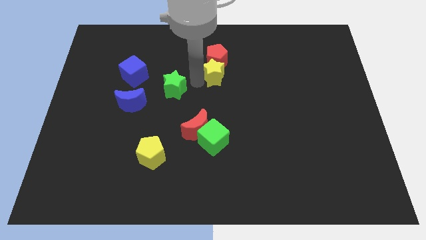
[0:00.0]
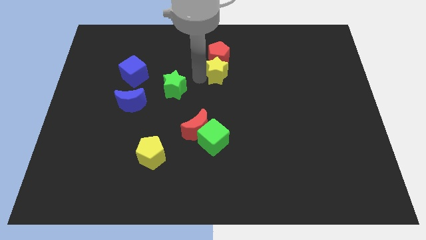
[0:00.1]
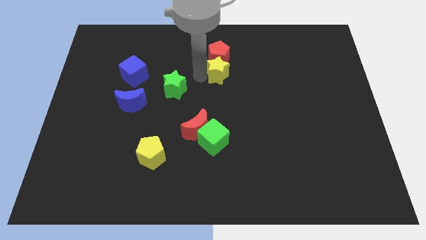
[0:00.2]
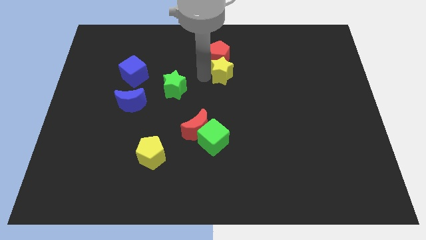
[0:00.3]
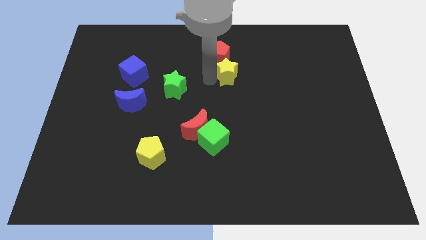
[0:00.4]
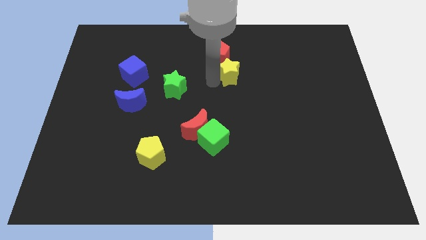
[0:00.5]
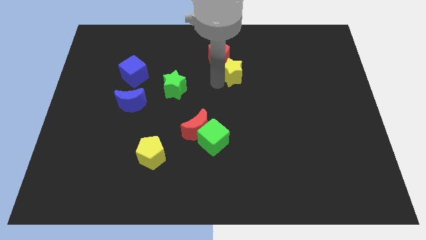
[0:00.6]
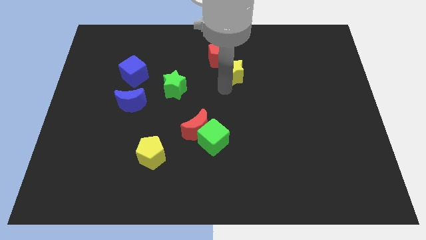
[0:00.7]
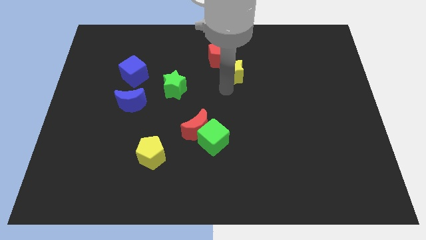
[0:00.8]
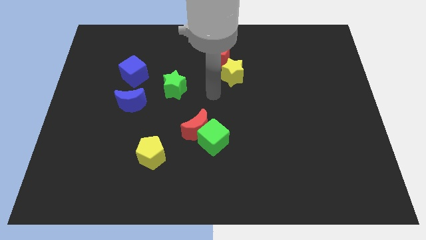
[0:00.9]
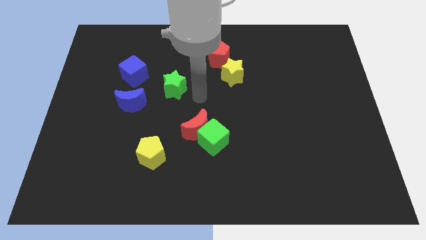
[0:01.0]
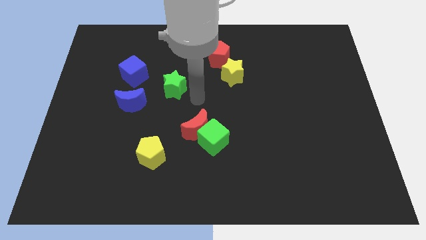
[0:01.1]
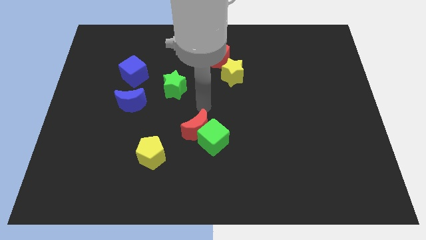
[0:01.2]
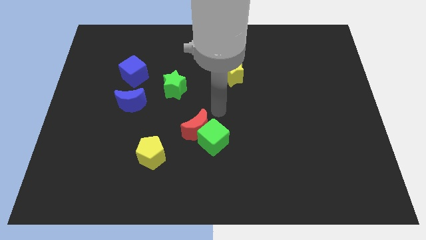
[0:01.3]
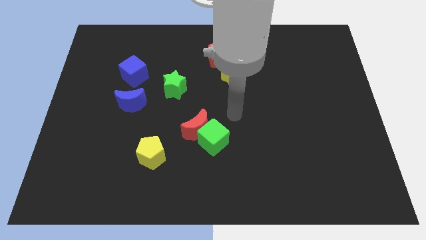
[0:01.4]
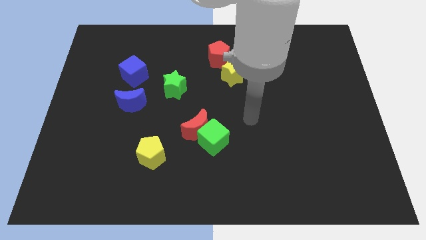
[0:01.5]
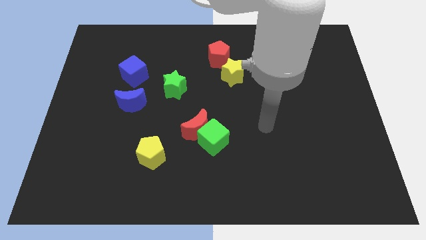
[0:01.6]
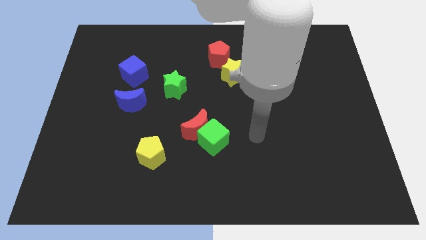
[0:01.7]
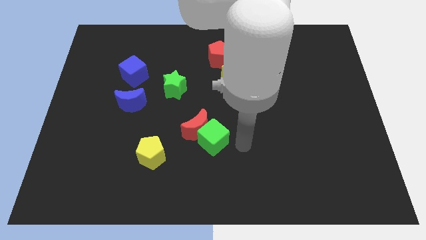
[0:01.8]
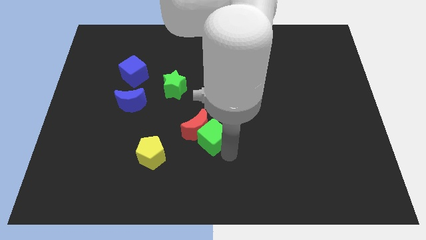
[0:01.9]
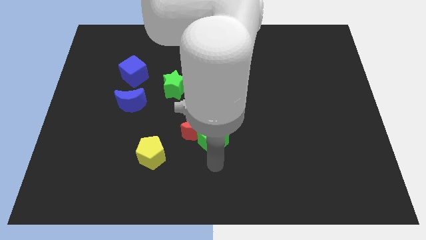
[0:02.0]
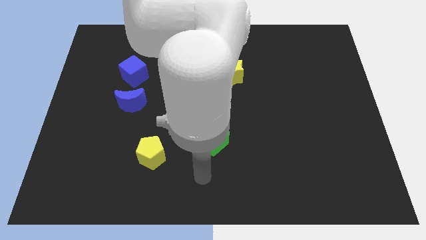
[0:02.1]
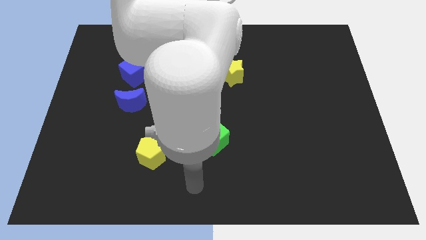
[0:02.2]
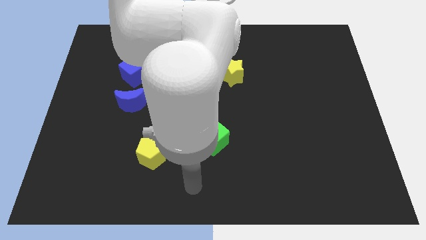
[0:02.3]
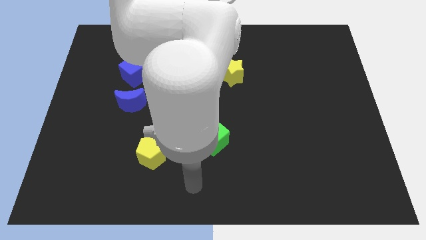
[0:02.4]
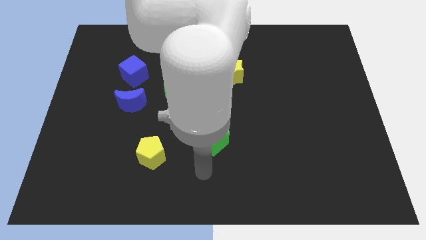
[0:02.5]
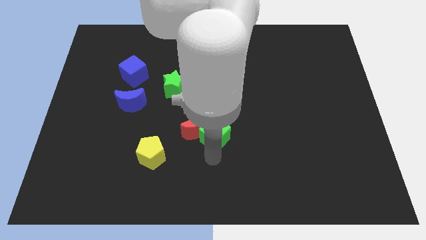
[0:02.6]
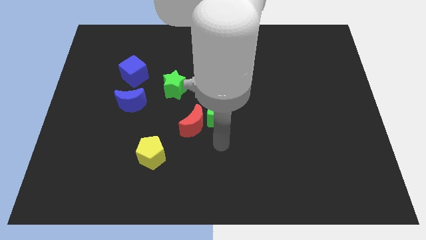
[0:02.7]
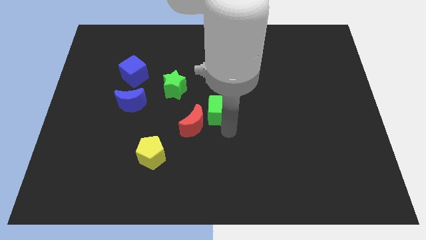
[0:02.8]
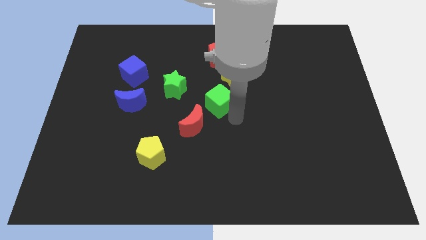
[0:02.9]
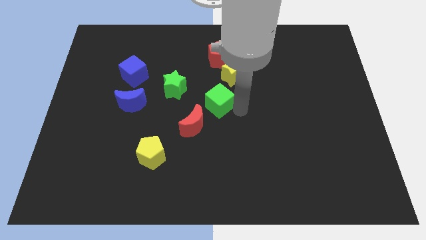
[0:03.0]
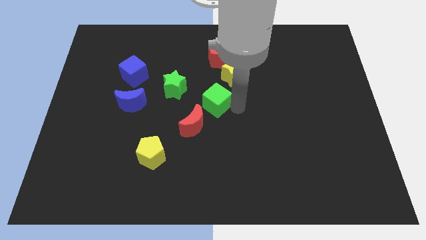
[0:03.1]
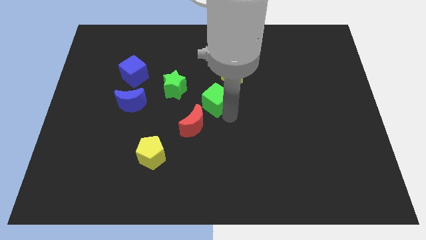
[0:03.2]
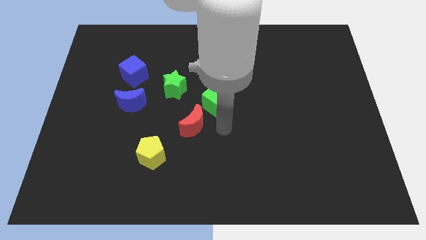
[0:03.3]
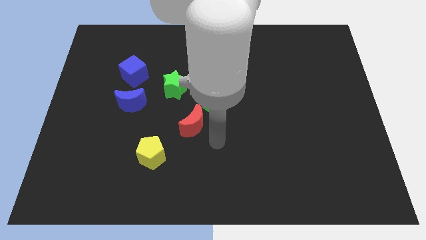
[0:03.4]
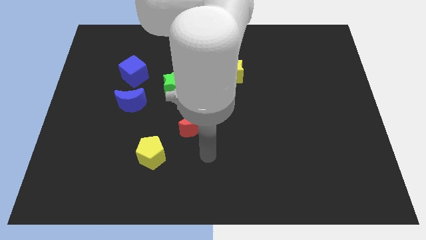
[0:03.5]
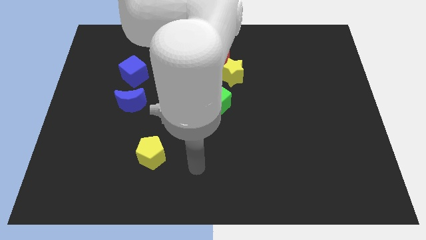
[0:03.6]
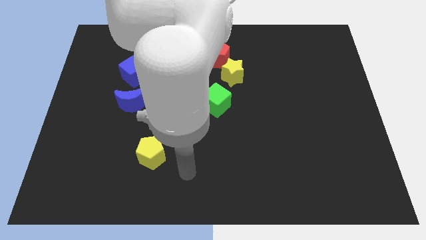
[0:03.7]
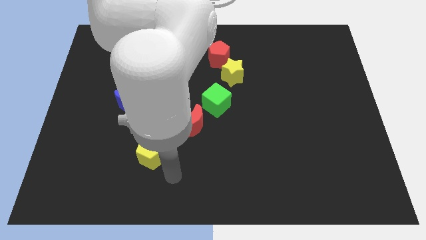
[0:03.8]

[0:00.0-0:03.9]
place the green cube in between the yellow star and red moon

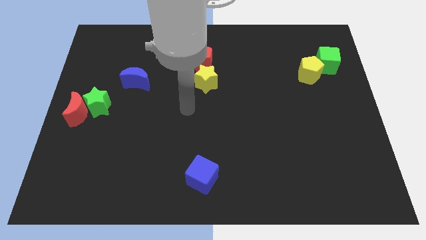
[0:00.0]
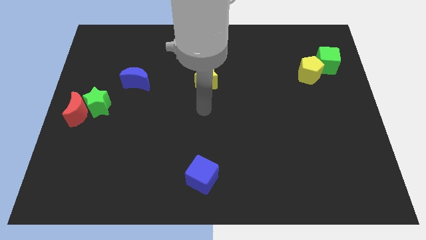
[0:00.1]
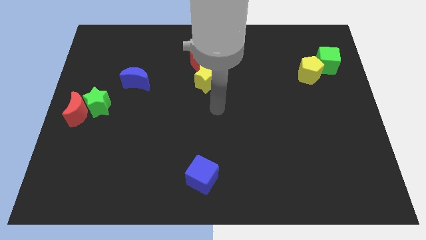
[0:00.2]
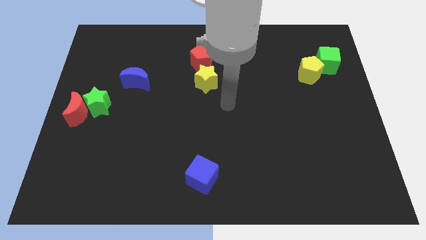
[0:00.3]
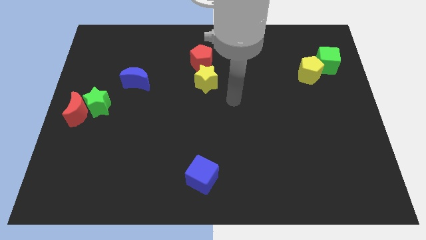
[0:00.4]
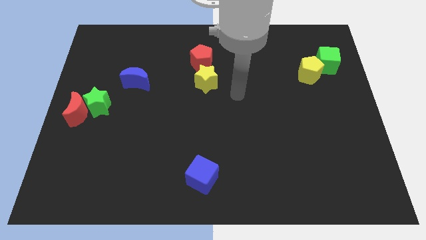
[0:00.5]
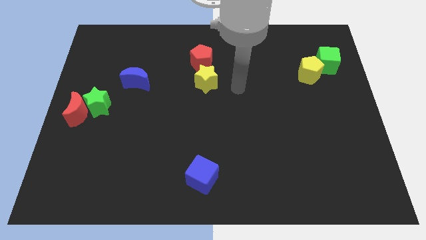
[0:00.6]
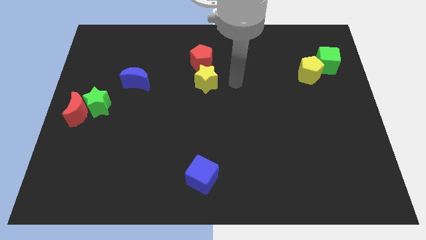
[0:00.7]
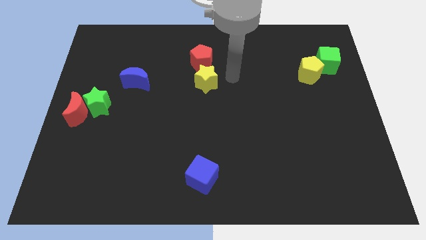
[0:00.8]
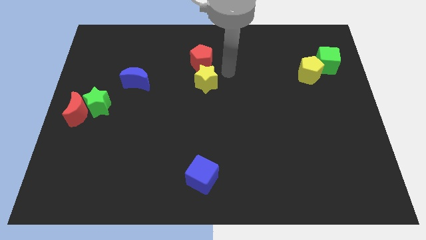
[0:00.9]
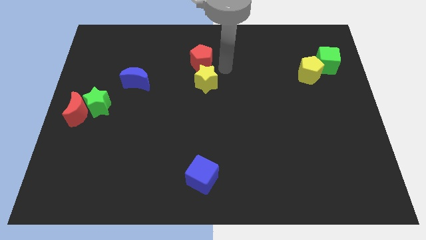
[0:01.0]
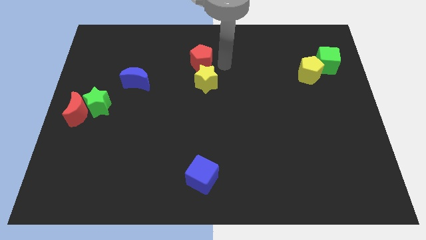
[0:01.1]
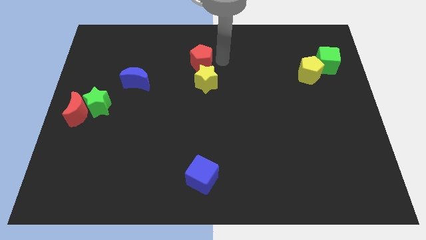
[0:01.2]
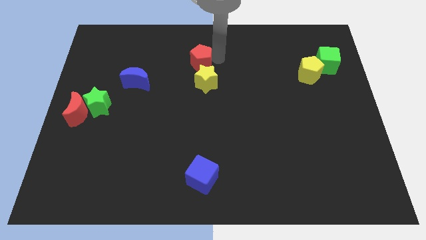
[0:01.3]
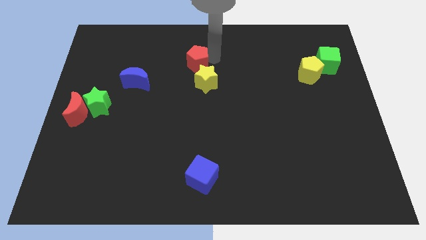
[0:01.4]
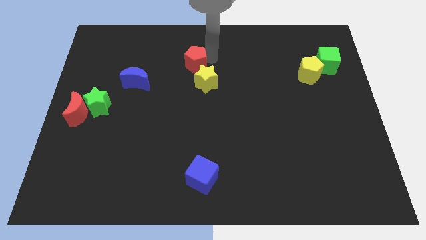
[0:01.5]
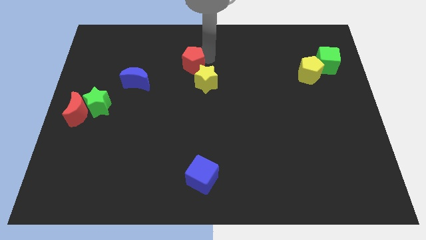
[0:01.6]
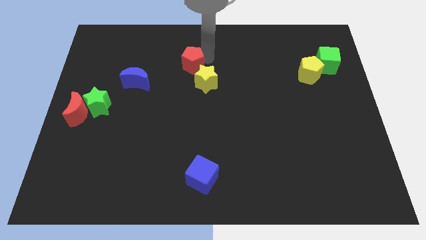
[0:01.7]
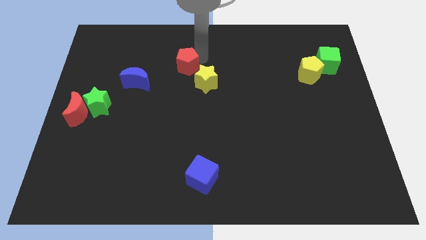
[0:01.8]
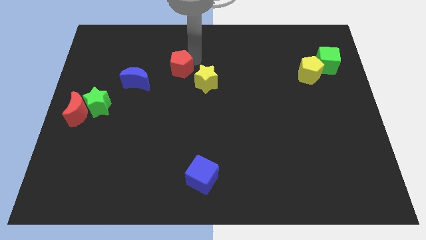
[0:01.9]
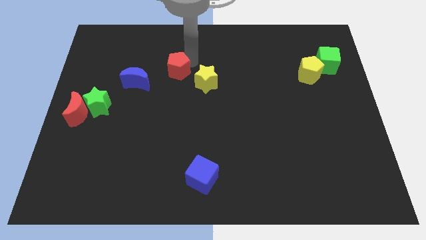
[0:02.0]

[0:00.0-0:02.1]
push red pentagon to the top left of yellow star

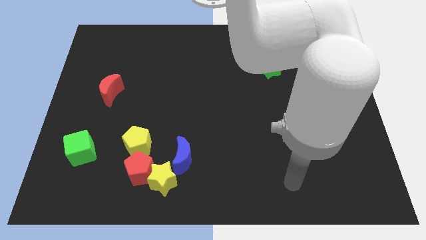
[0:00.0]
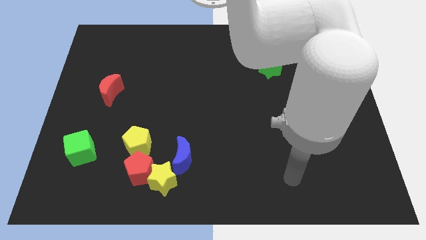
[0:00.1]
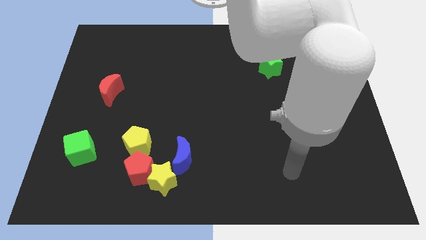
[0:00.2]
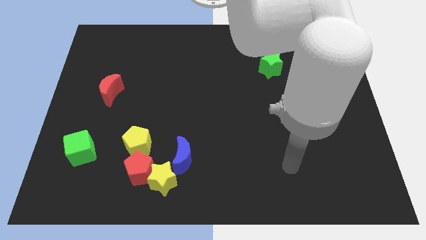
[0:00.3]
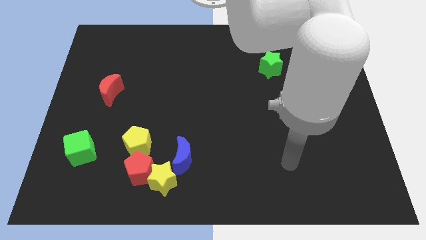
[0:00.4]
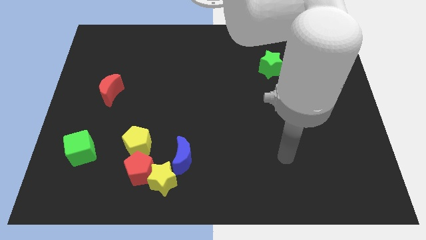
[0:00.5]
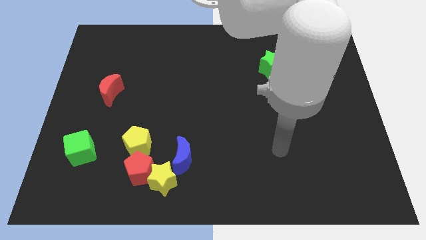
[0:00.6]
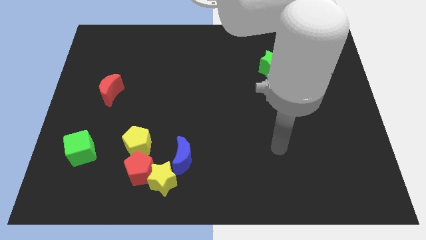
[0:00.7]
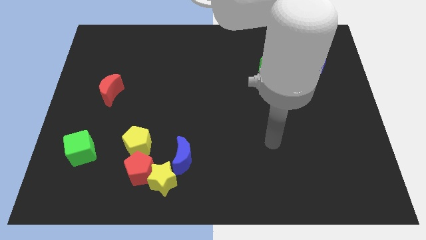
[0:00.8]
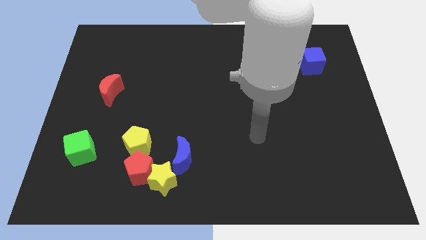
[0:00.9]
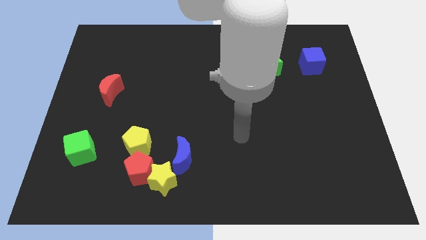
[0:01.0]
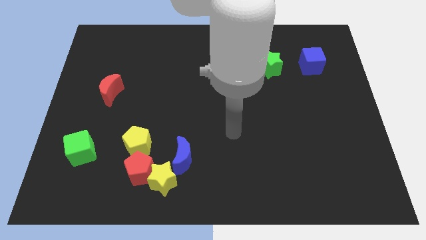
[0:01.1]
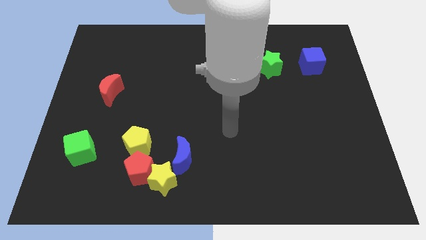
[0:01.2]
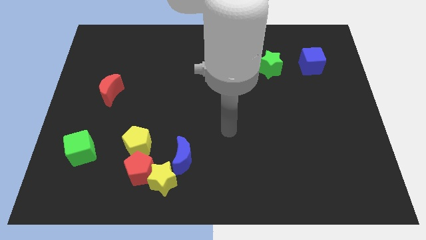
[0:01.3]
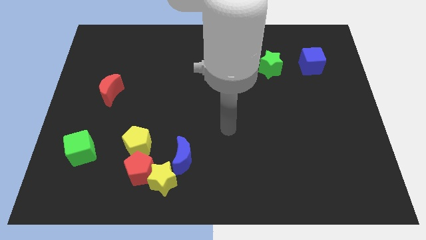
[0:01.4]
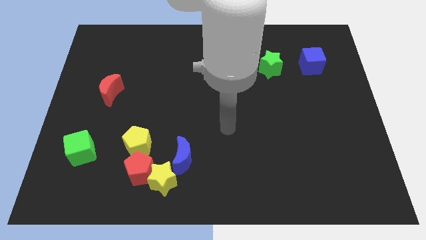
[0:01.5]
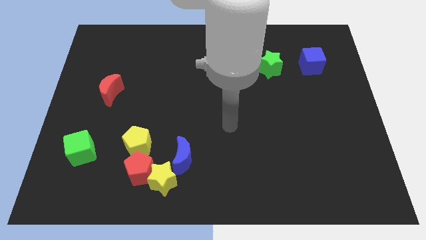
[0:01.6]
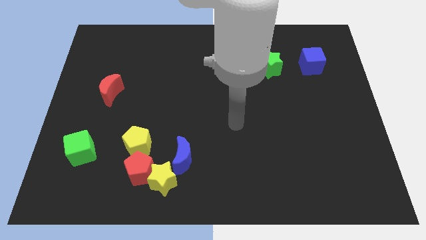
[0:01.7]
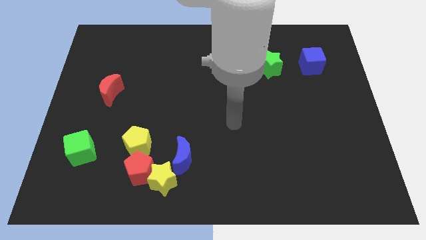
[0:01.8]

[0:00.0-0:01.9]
move your arm to the center of the board

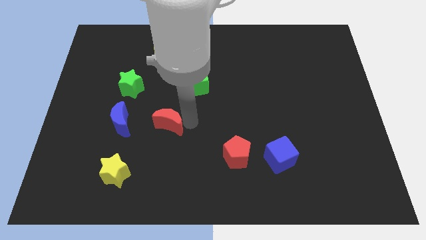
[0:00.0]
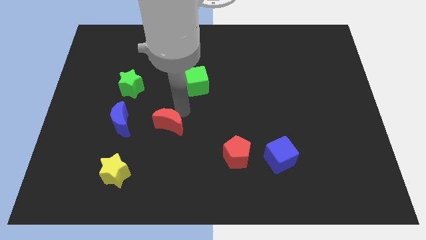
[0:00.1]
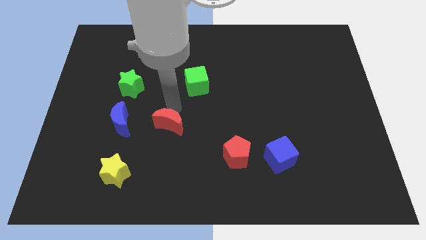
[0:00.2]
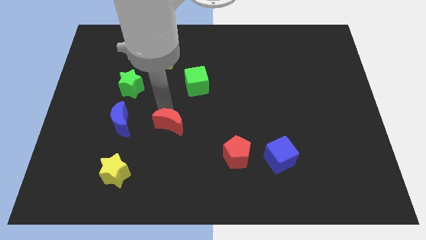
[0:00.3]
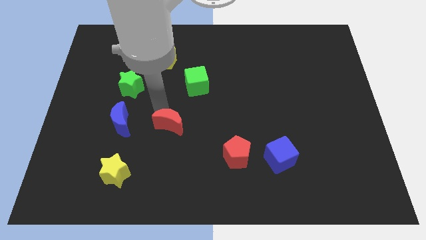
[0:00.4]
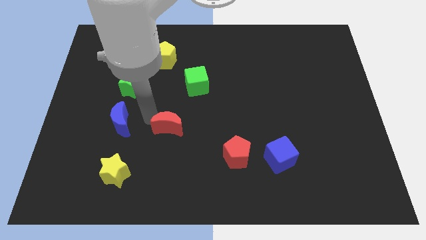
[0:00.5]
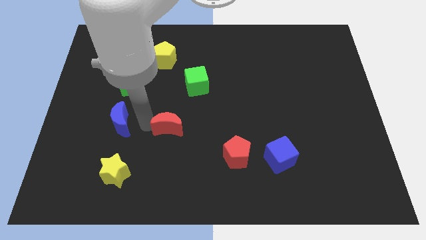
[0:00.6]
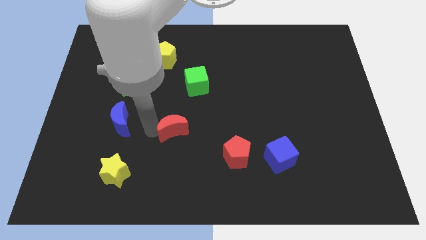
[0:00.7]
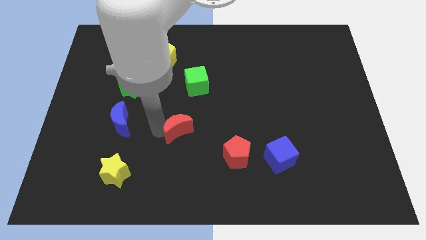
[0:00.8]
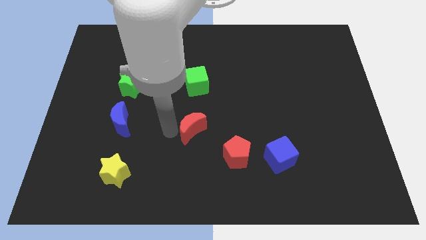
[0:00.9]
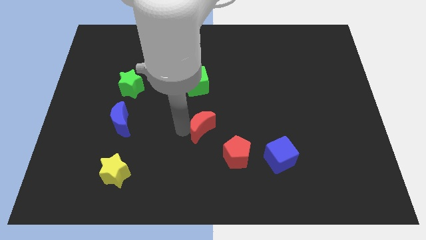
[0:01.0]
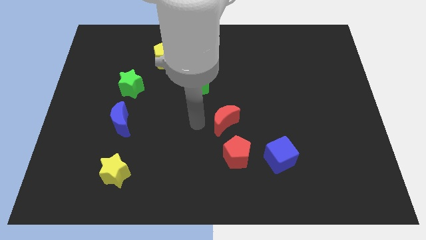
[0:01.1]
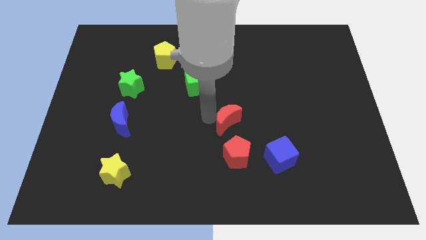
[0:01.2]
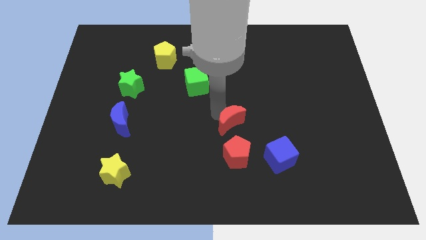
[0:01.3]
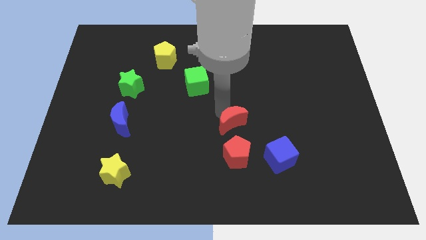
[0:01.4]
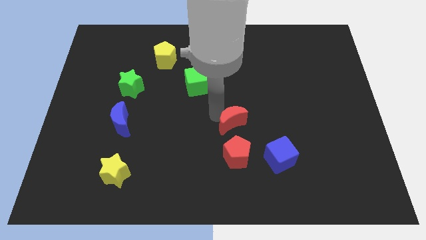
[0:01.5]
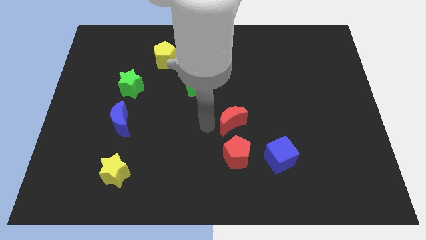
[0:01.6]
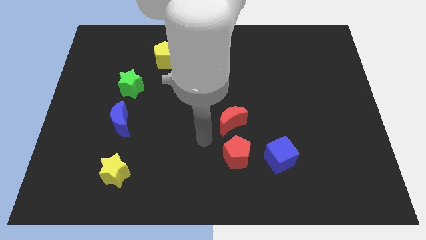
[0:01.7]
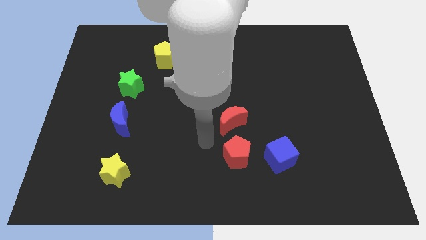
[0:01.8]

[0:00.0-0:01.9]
place red moon above red pentagon
